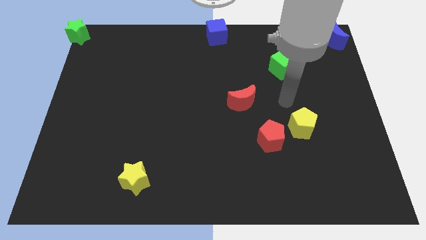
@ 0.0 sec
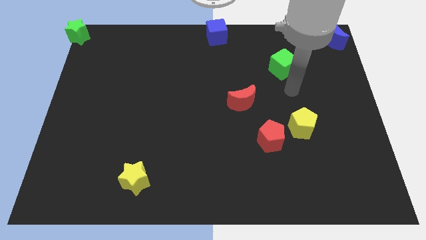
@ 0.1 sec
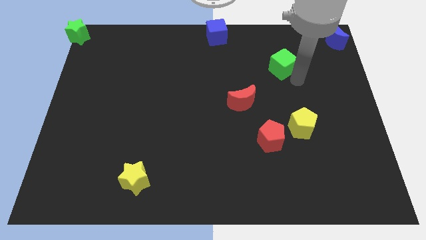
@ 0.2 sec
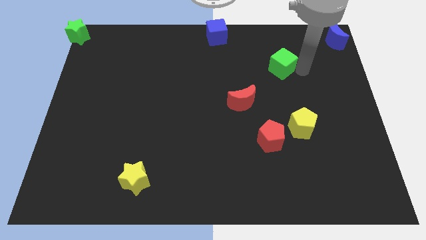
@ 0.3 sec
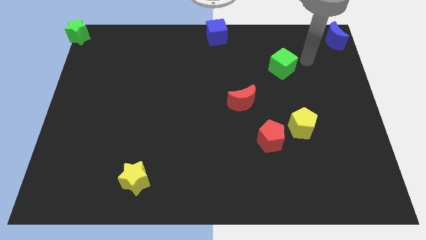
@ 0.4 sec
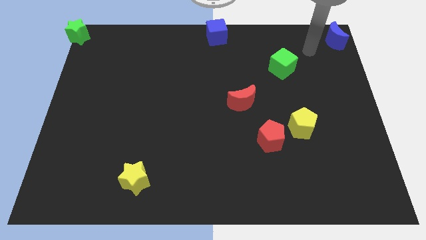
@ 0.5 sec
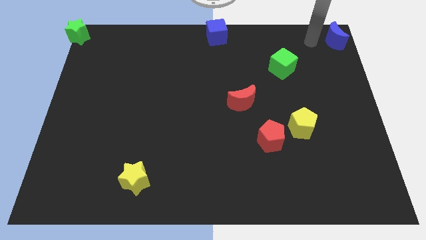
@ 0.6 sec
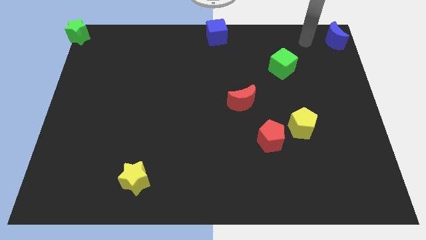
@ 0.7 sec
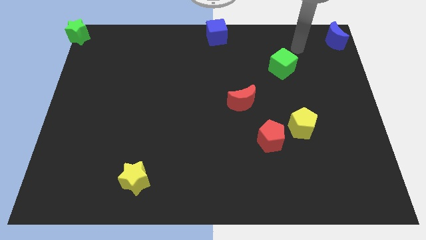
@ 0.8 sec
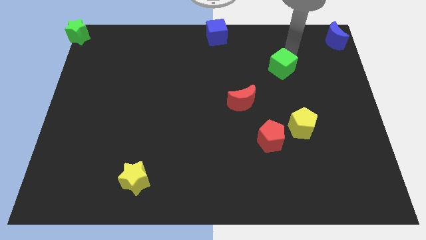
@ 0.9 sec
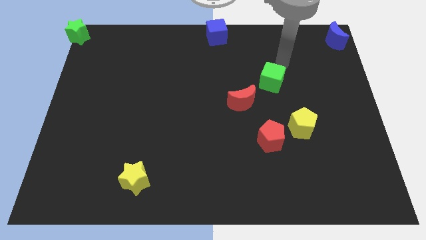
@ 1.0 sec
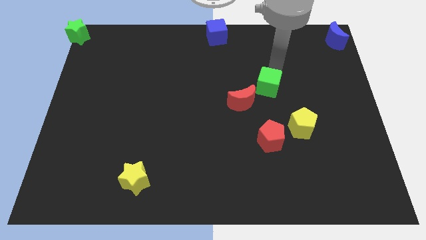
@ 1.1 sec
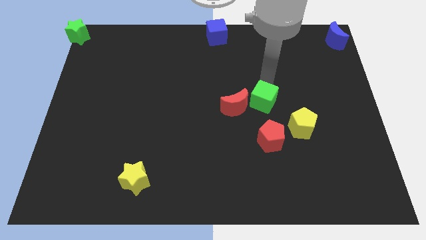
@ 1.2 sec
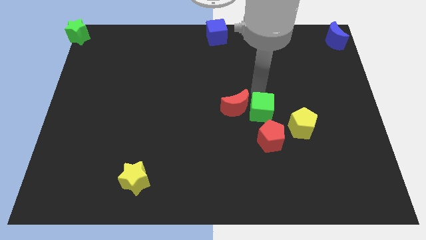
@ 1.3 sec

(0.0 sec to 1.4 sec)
move the green cube to the right of the red crescent

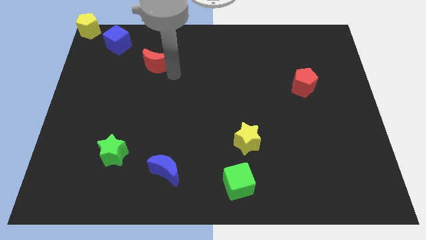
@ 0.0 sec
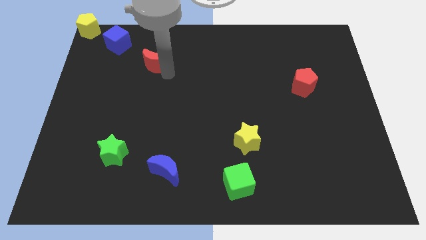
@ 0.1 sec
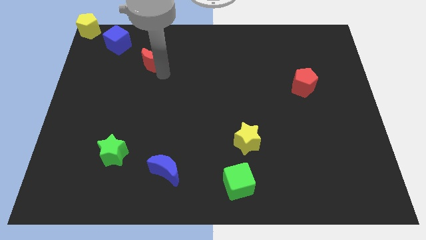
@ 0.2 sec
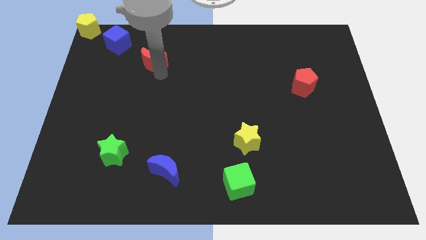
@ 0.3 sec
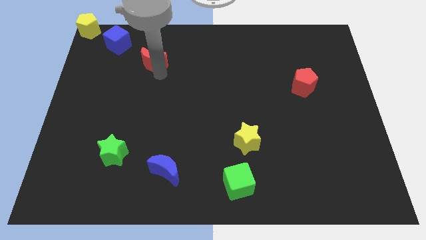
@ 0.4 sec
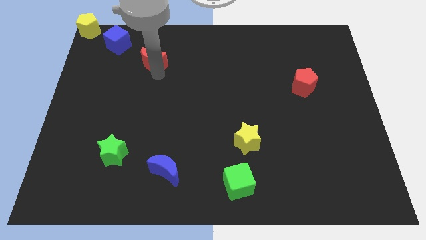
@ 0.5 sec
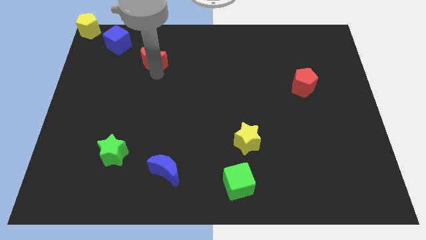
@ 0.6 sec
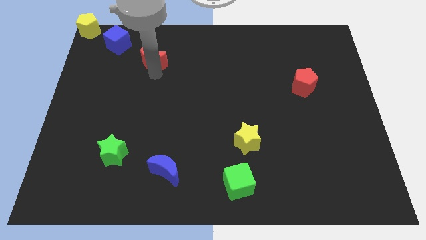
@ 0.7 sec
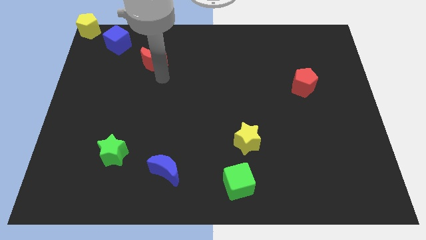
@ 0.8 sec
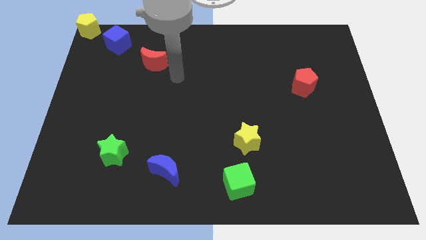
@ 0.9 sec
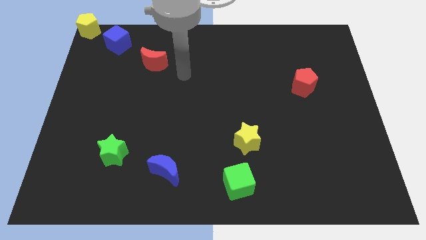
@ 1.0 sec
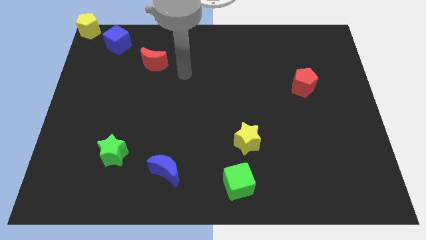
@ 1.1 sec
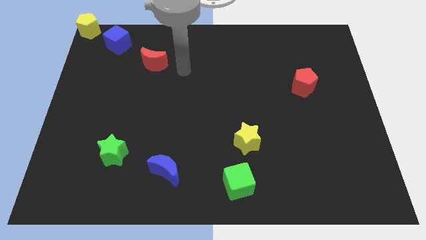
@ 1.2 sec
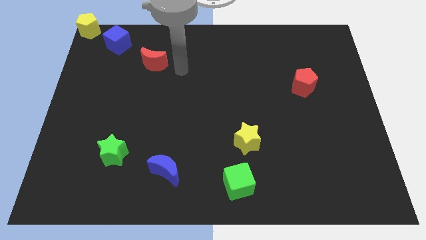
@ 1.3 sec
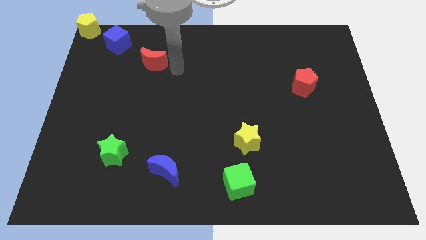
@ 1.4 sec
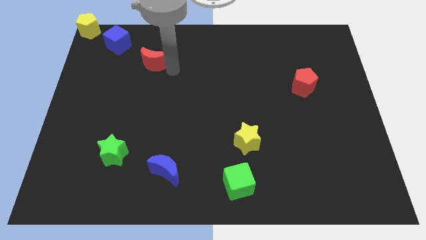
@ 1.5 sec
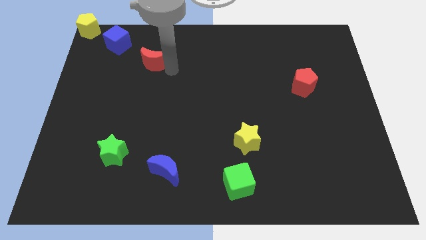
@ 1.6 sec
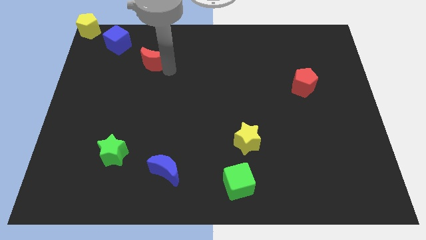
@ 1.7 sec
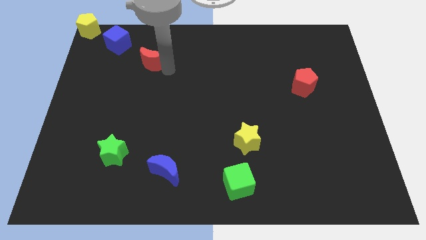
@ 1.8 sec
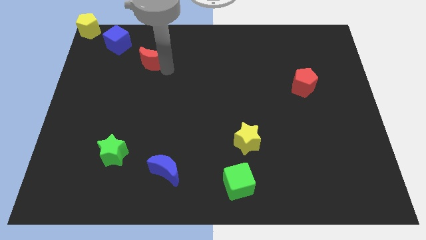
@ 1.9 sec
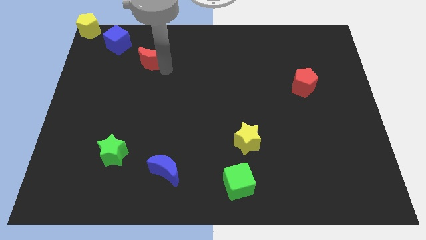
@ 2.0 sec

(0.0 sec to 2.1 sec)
push the red crescent to bottom right side of the blue cube

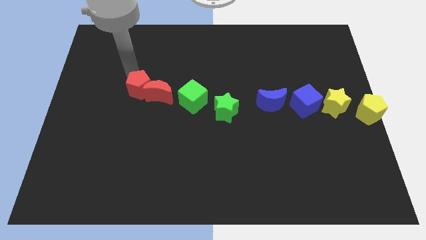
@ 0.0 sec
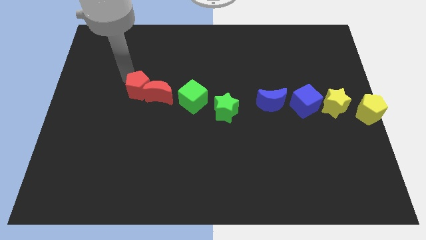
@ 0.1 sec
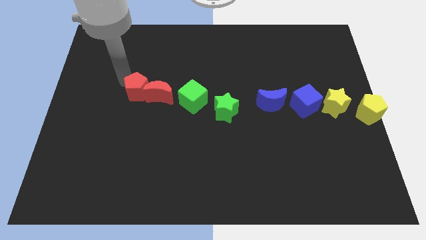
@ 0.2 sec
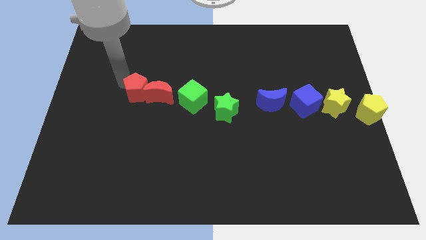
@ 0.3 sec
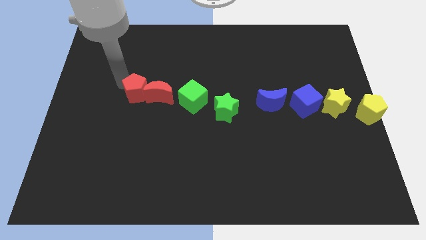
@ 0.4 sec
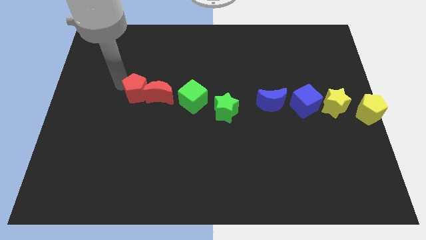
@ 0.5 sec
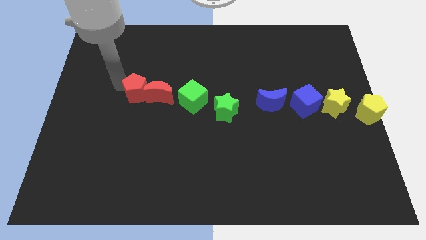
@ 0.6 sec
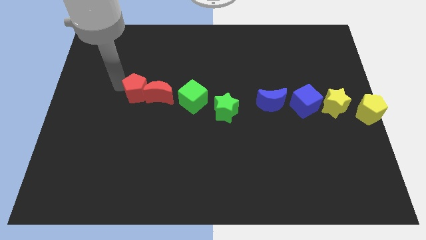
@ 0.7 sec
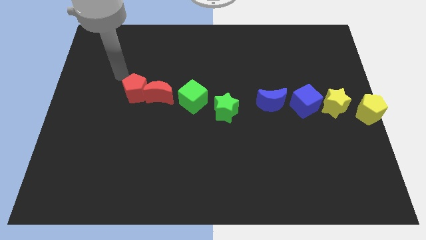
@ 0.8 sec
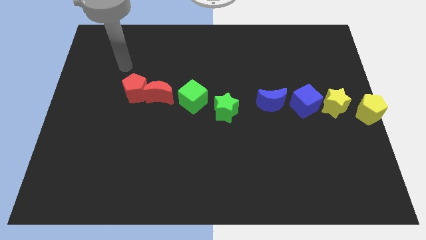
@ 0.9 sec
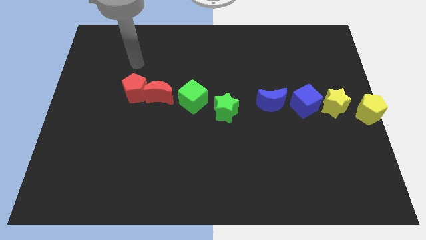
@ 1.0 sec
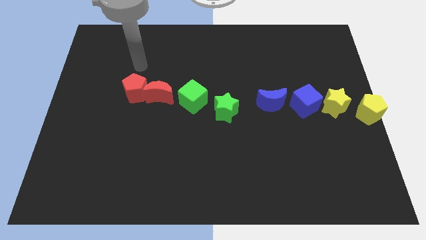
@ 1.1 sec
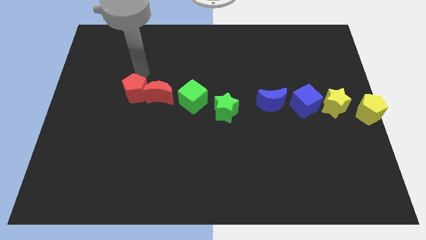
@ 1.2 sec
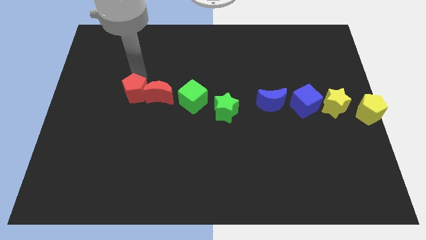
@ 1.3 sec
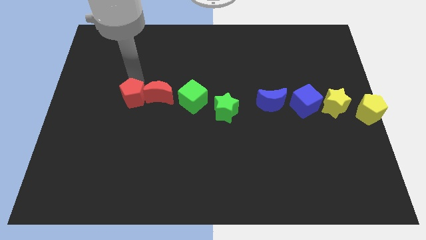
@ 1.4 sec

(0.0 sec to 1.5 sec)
place the red pentagon left to red moon

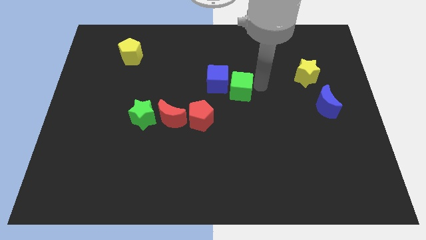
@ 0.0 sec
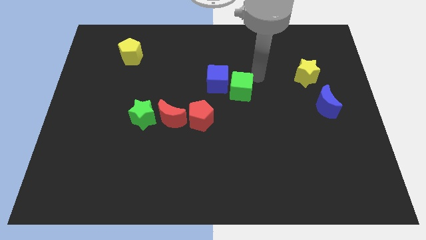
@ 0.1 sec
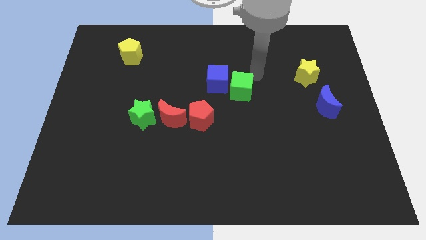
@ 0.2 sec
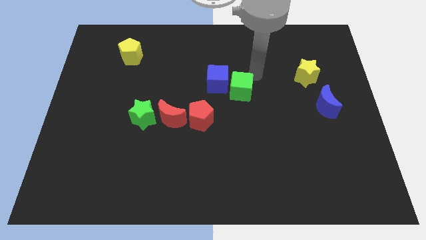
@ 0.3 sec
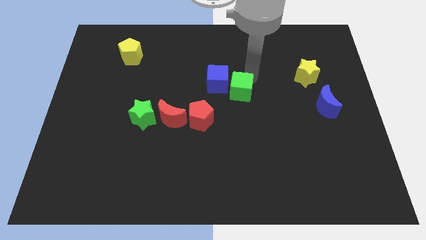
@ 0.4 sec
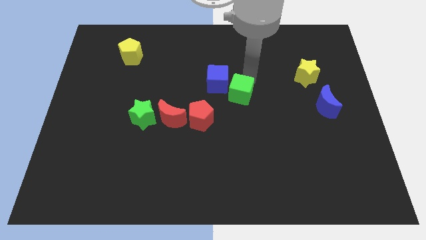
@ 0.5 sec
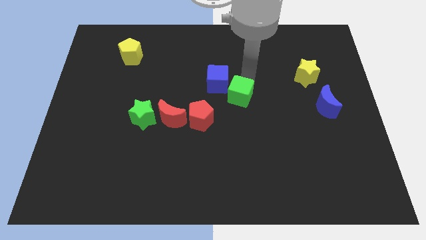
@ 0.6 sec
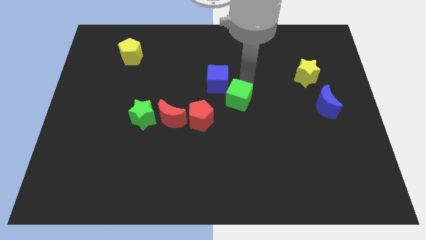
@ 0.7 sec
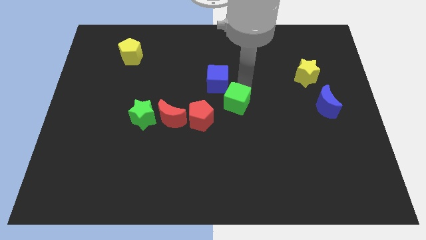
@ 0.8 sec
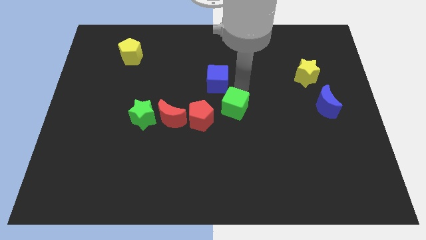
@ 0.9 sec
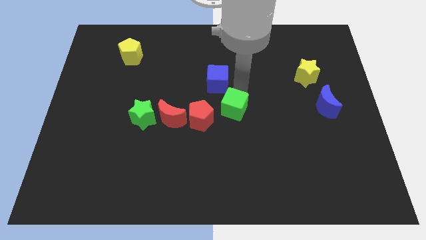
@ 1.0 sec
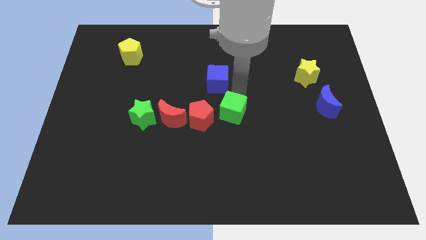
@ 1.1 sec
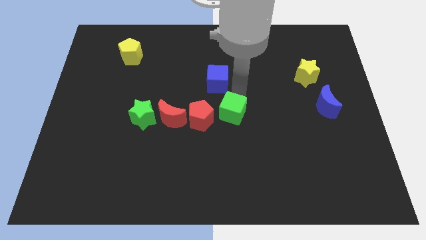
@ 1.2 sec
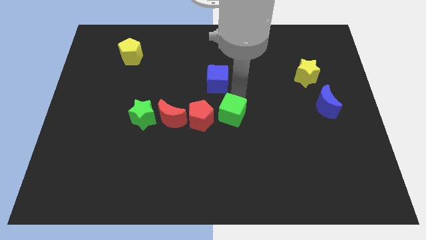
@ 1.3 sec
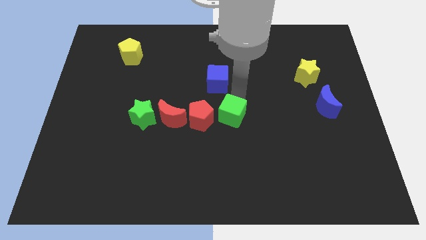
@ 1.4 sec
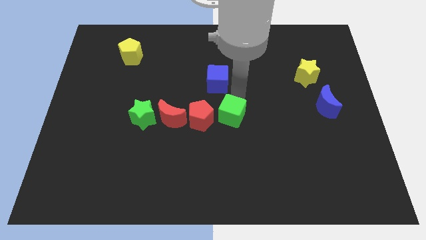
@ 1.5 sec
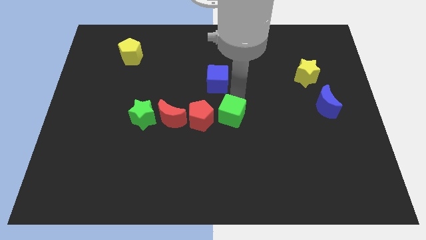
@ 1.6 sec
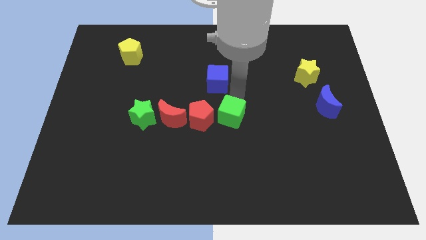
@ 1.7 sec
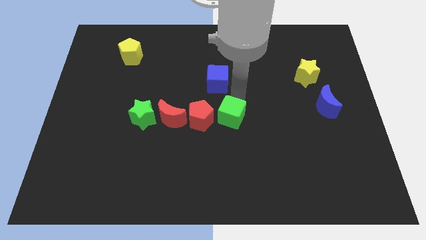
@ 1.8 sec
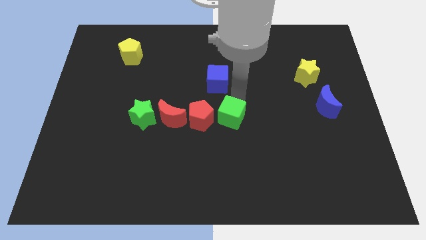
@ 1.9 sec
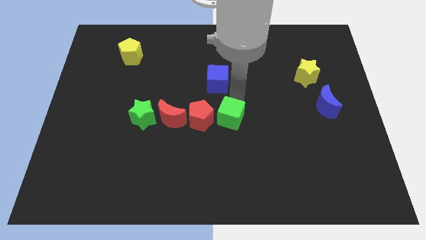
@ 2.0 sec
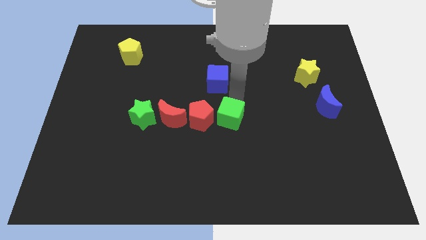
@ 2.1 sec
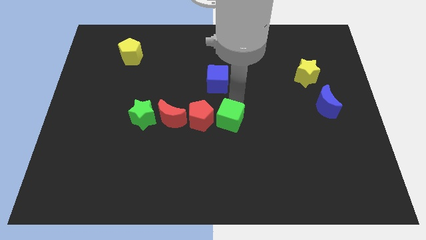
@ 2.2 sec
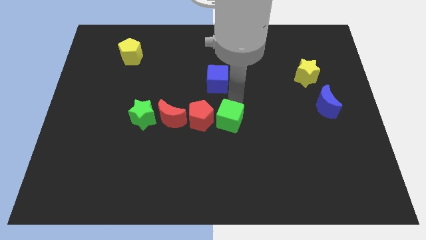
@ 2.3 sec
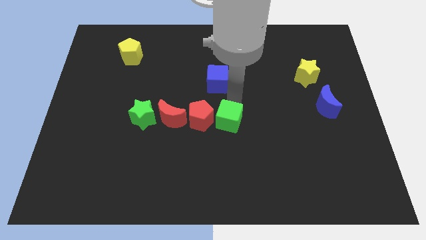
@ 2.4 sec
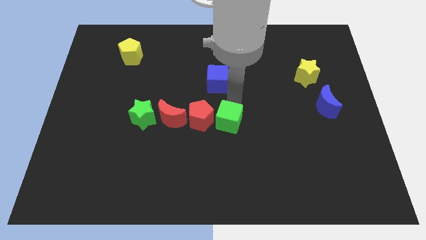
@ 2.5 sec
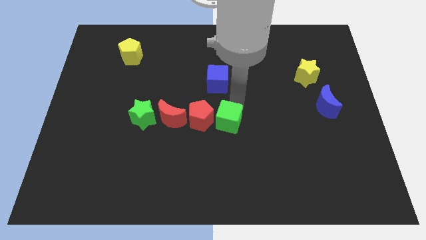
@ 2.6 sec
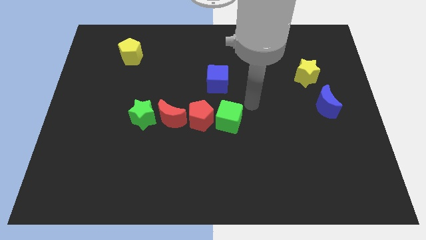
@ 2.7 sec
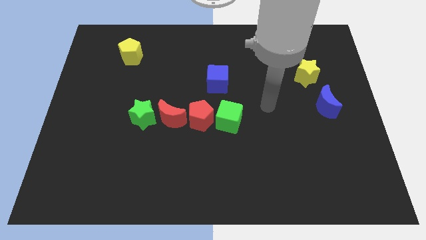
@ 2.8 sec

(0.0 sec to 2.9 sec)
move green cube to the right of red pentagon

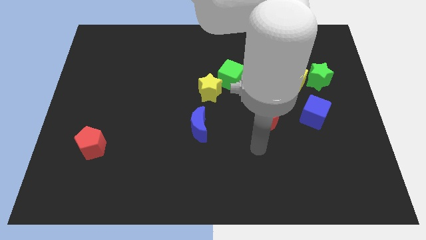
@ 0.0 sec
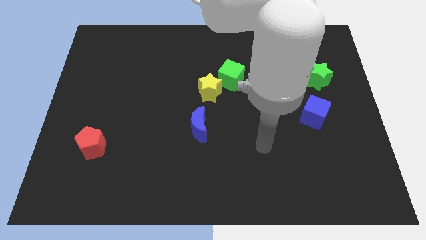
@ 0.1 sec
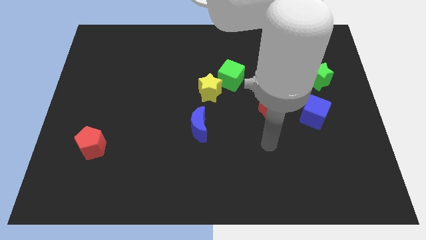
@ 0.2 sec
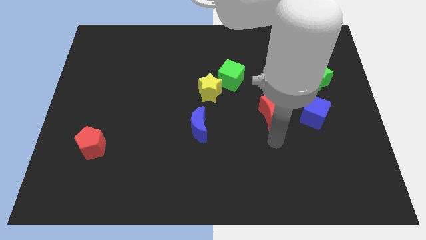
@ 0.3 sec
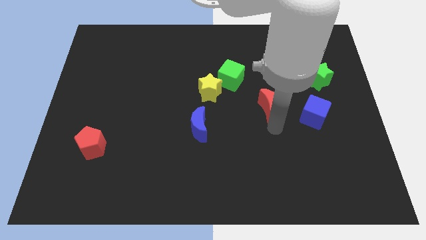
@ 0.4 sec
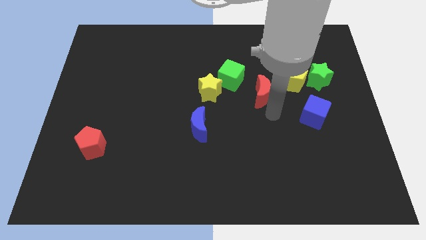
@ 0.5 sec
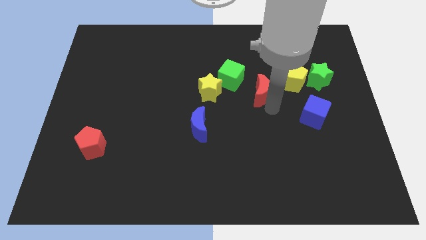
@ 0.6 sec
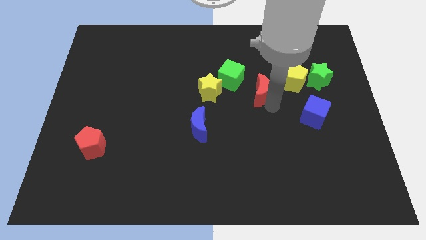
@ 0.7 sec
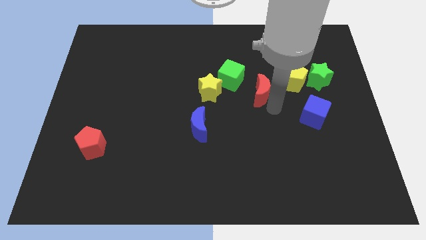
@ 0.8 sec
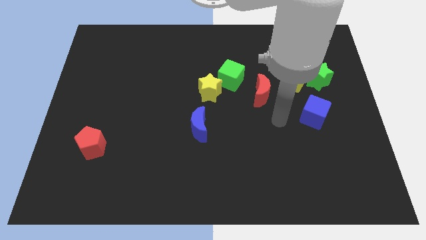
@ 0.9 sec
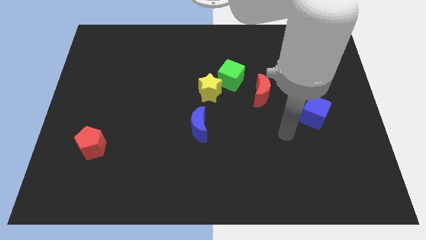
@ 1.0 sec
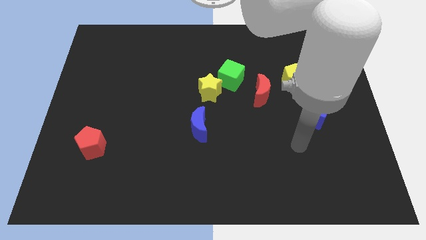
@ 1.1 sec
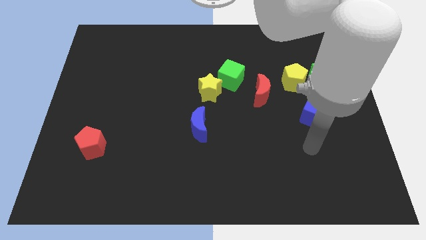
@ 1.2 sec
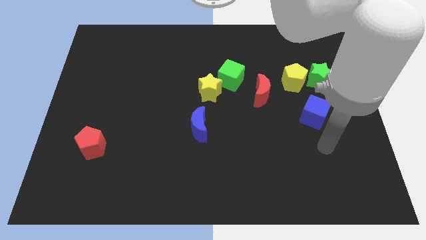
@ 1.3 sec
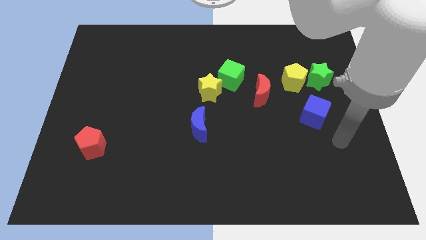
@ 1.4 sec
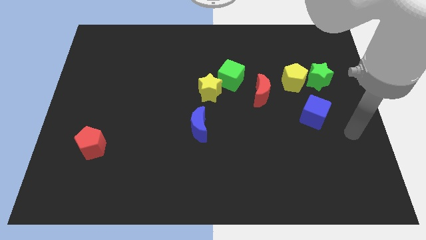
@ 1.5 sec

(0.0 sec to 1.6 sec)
push the red moon to the bottom right of the green cube
